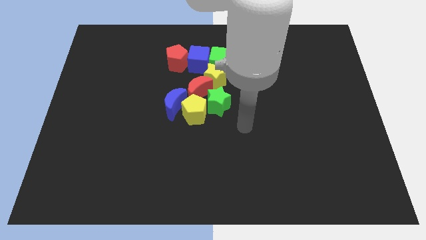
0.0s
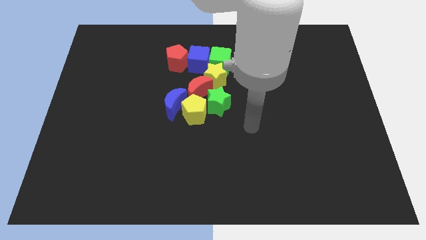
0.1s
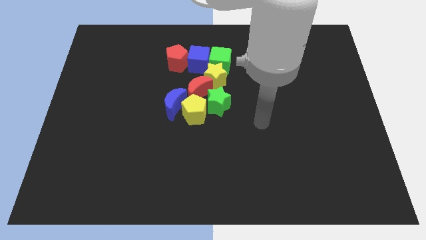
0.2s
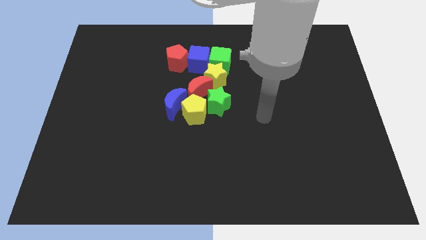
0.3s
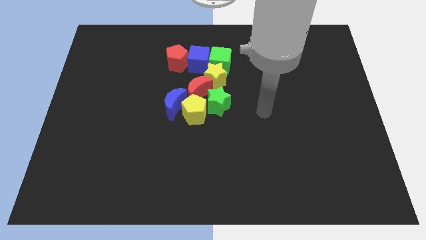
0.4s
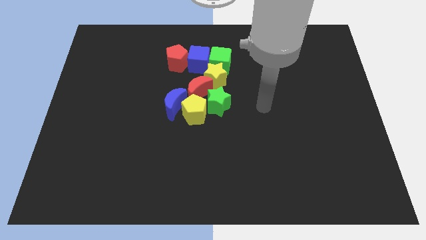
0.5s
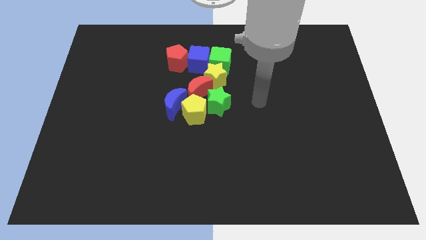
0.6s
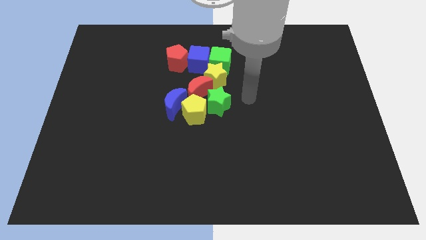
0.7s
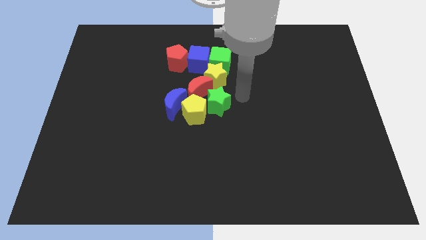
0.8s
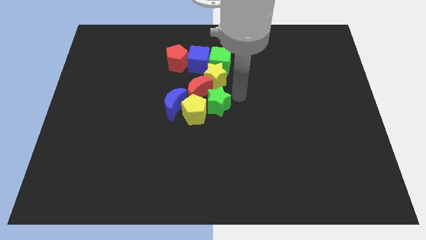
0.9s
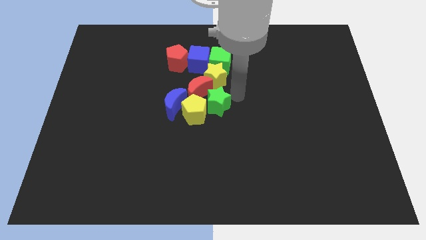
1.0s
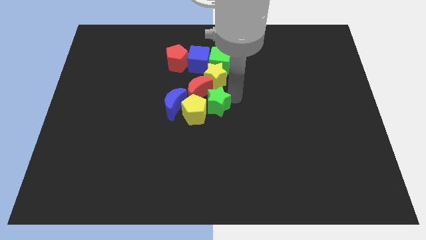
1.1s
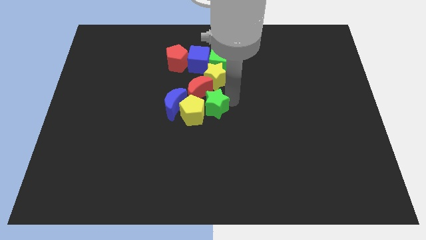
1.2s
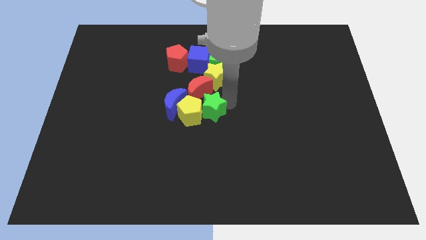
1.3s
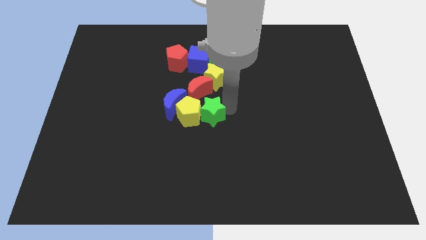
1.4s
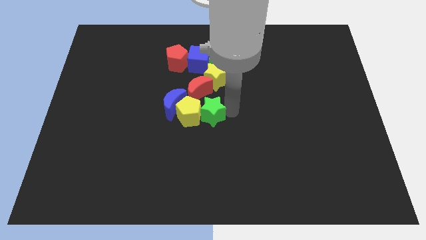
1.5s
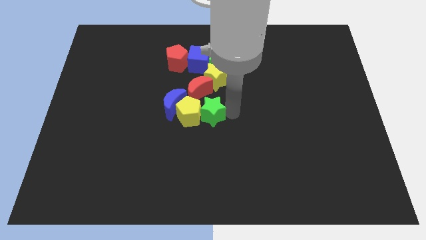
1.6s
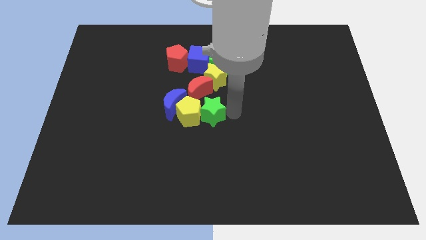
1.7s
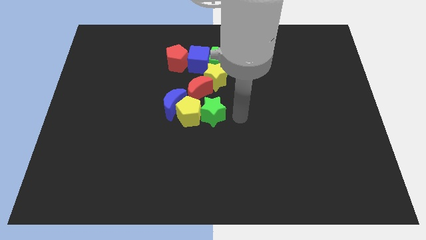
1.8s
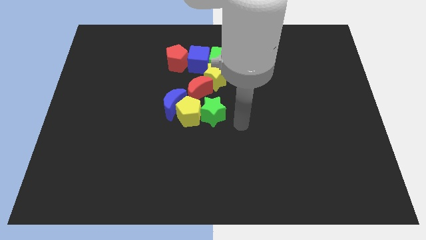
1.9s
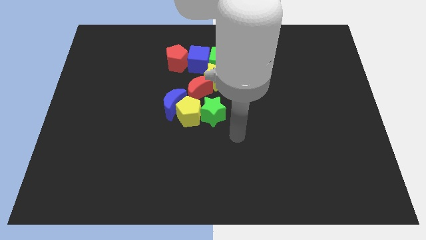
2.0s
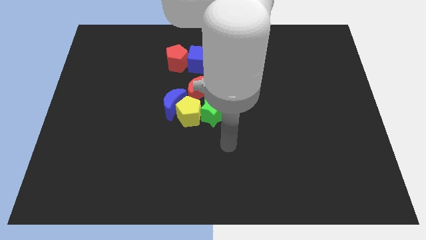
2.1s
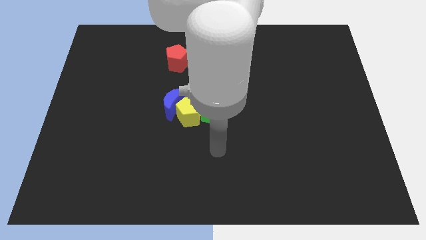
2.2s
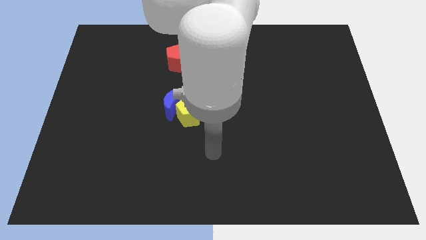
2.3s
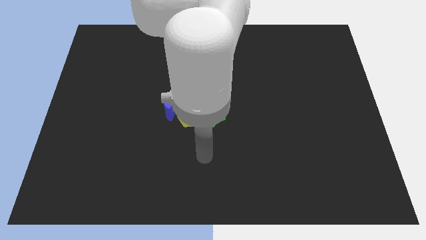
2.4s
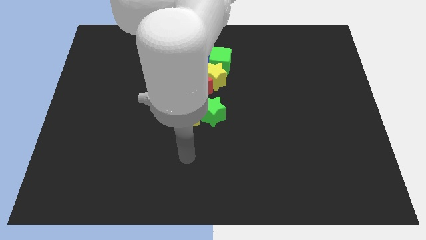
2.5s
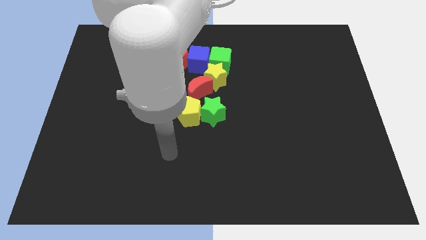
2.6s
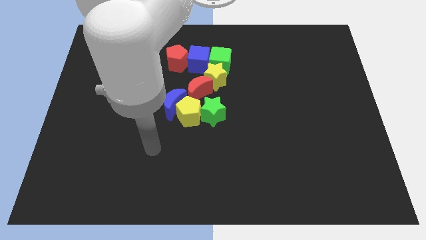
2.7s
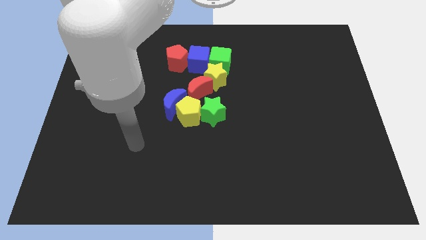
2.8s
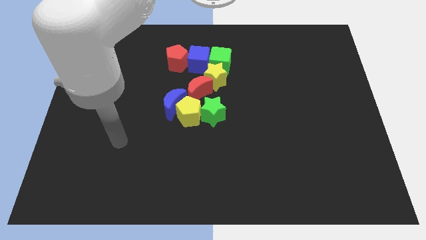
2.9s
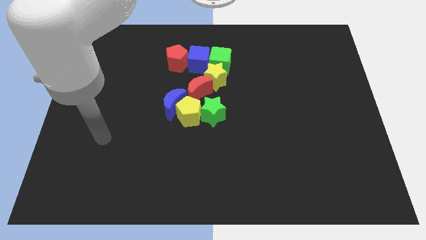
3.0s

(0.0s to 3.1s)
push the green star into the yellow pentagon

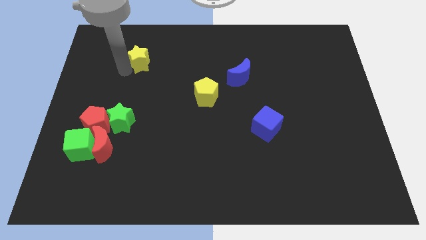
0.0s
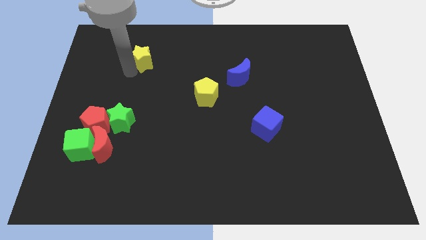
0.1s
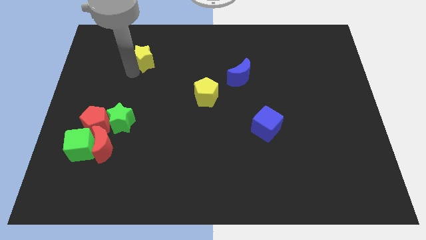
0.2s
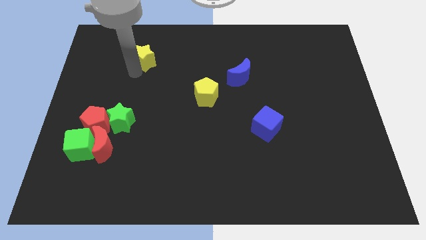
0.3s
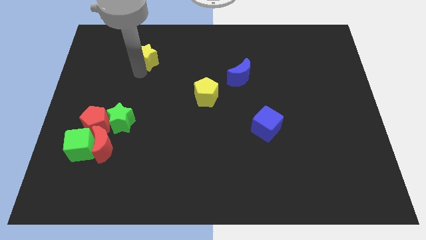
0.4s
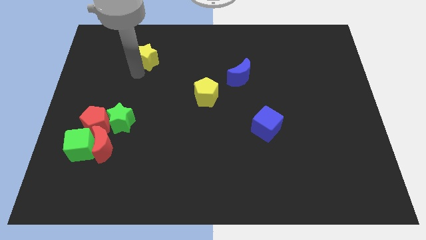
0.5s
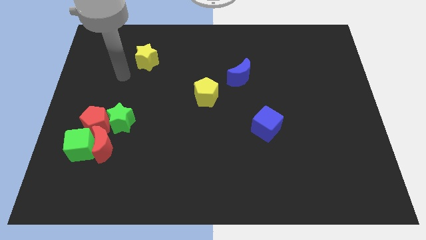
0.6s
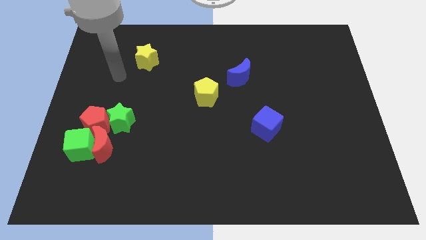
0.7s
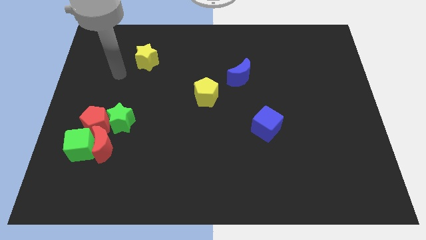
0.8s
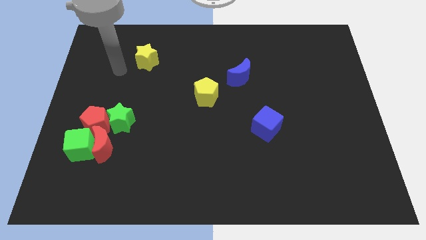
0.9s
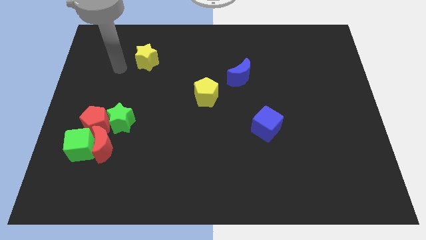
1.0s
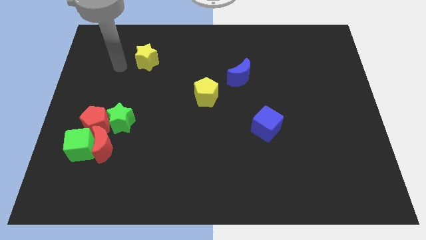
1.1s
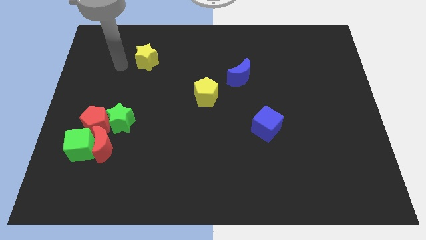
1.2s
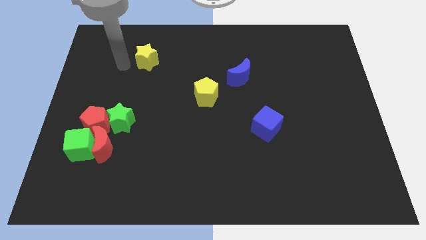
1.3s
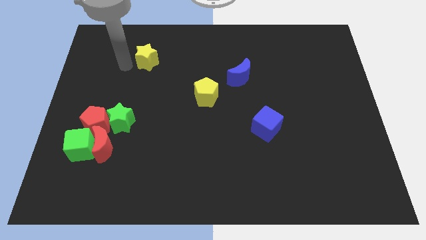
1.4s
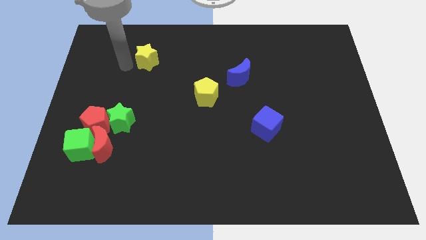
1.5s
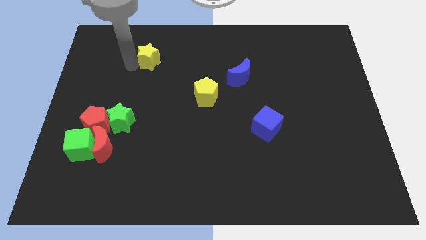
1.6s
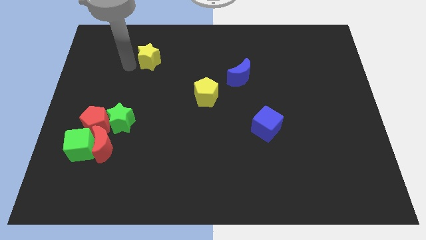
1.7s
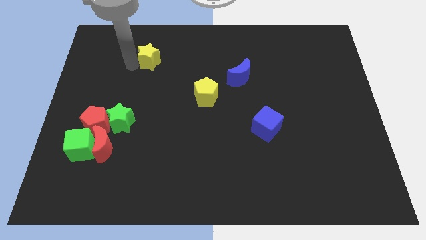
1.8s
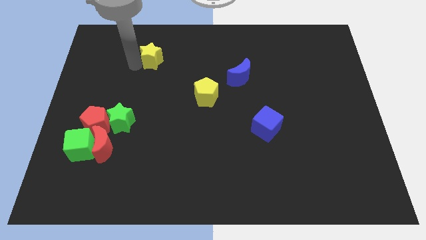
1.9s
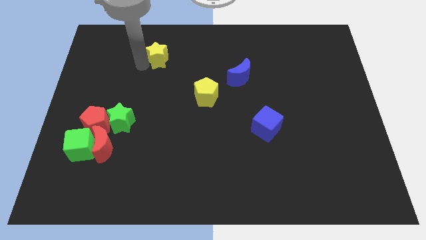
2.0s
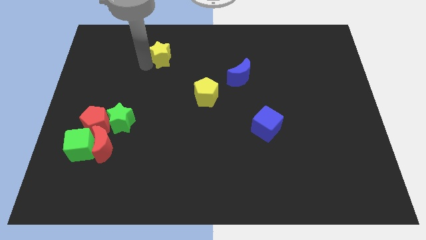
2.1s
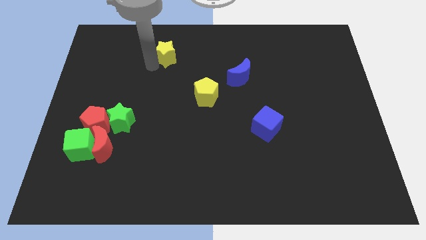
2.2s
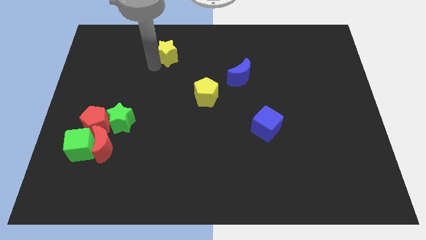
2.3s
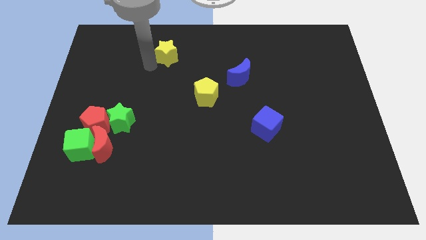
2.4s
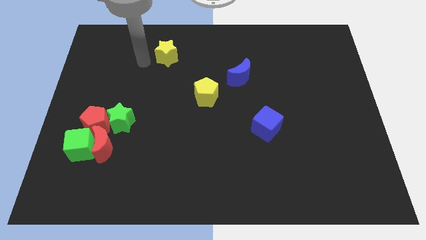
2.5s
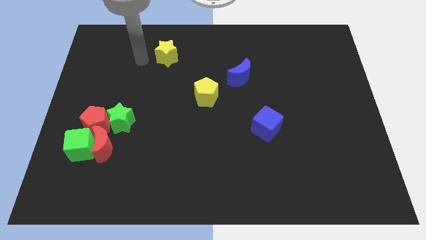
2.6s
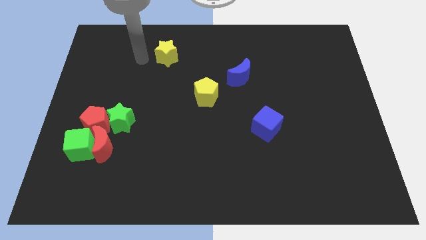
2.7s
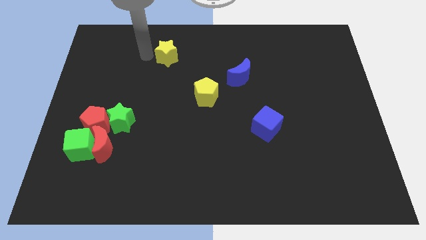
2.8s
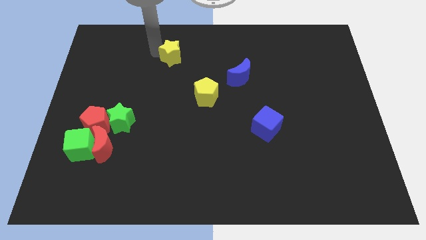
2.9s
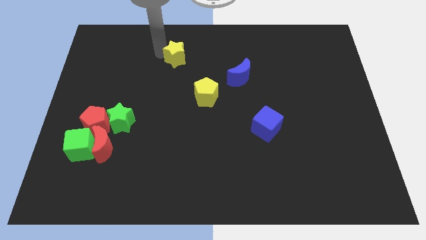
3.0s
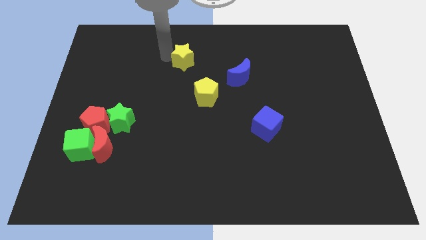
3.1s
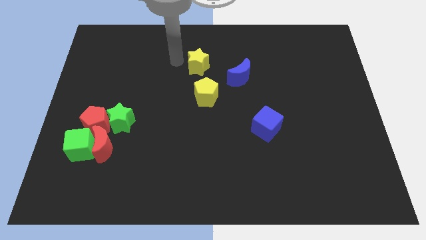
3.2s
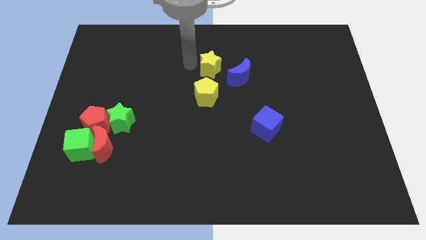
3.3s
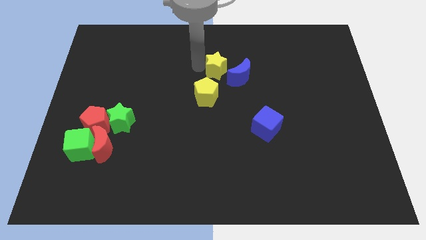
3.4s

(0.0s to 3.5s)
push yellow star above yellow pentagon

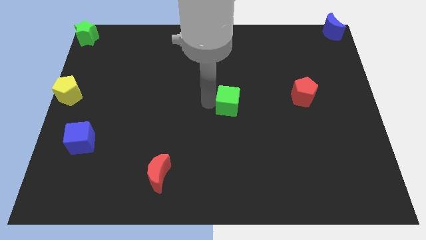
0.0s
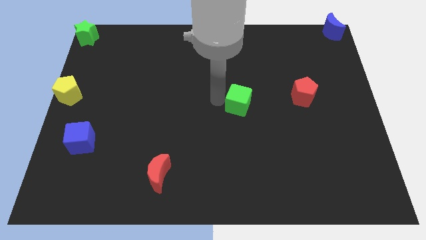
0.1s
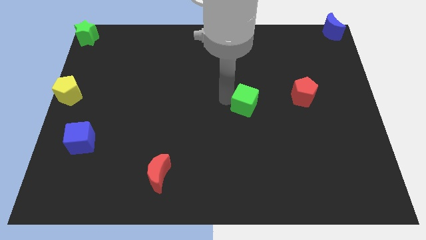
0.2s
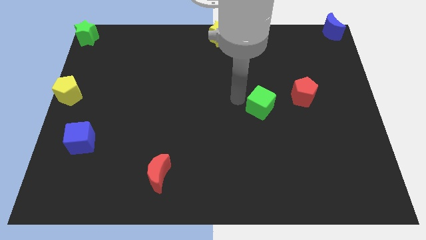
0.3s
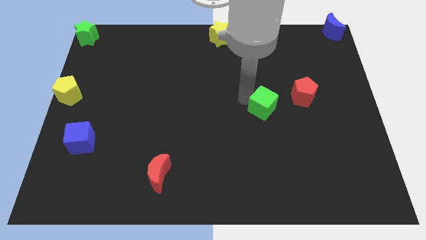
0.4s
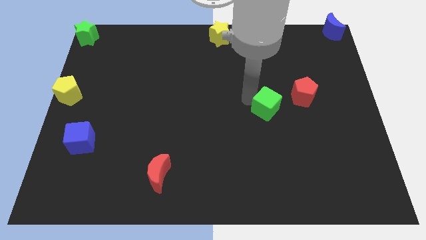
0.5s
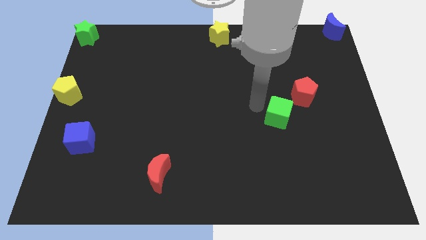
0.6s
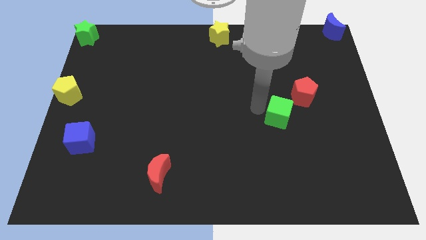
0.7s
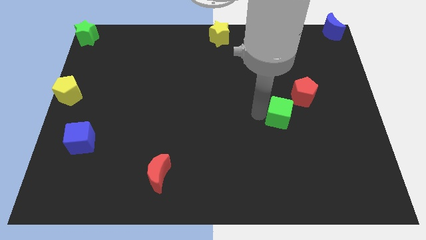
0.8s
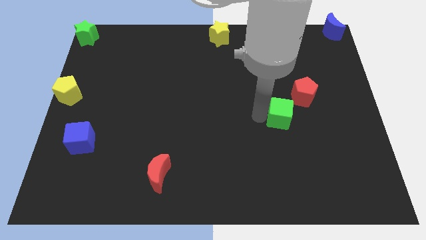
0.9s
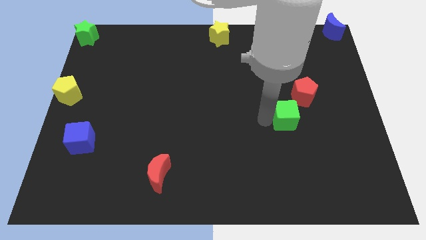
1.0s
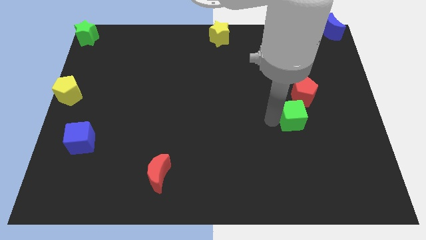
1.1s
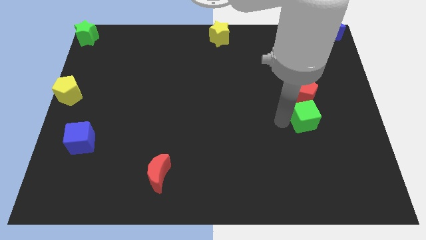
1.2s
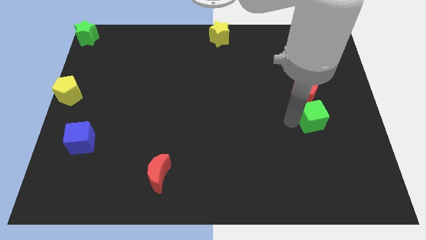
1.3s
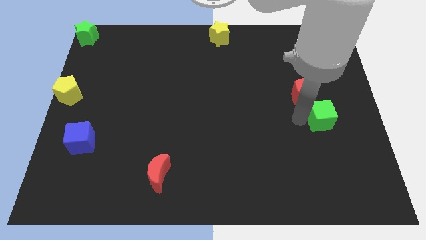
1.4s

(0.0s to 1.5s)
put the green cube below the red pentagon

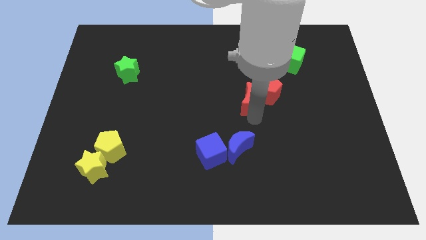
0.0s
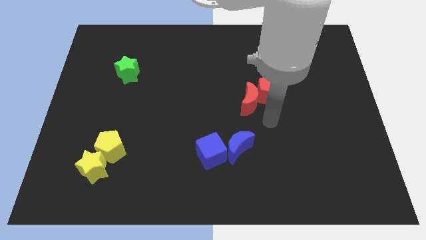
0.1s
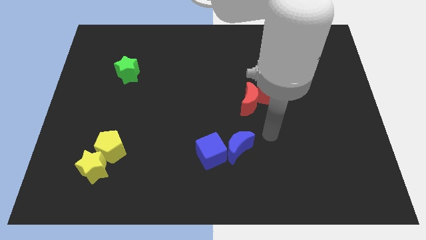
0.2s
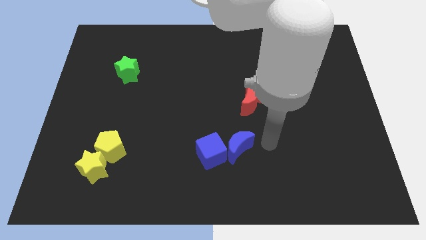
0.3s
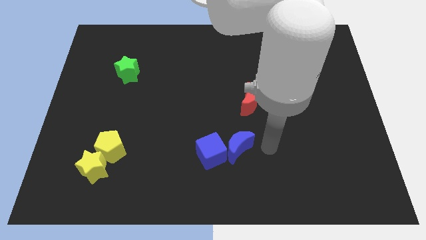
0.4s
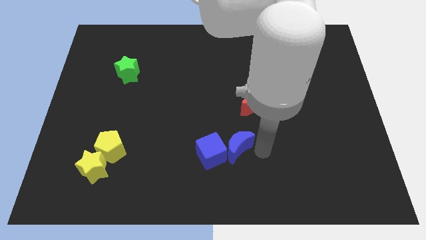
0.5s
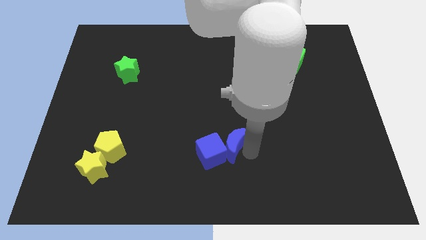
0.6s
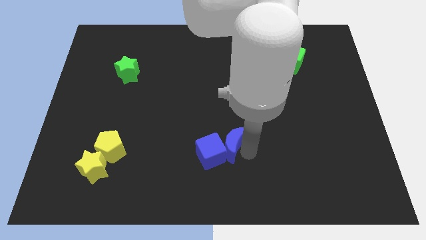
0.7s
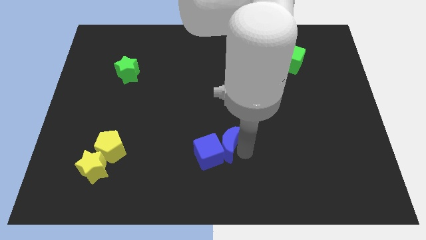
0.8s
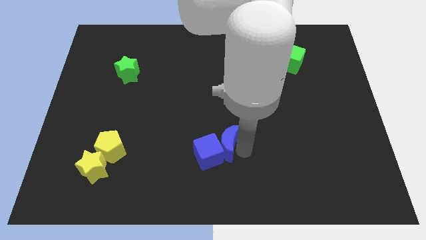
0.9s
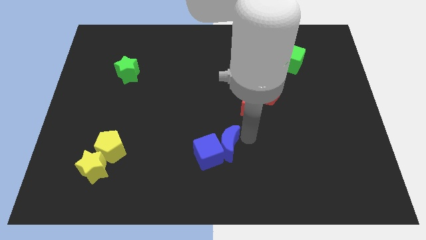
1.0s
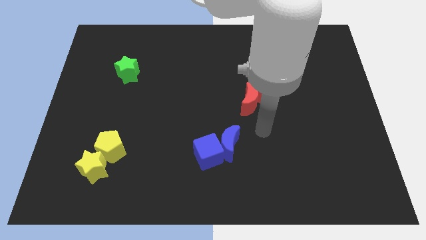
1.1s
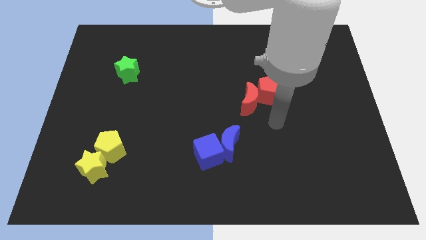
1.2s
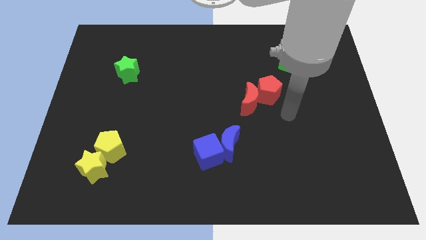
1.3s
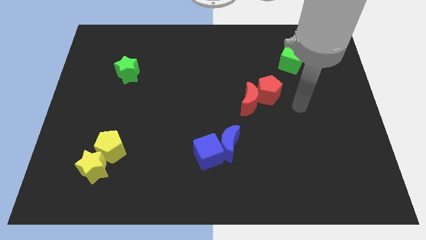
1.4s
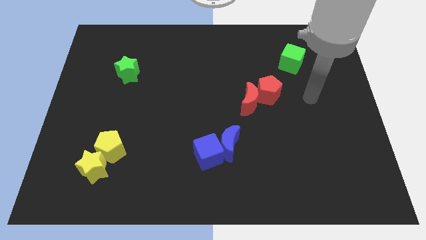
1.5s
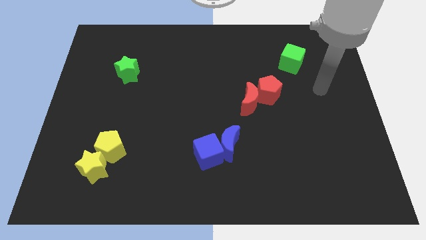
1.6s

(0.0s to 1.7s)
slide the blue blocks slightly to the left
